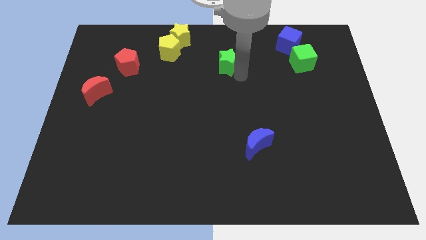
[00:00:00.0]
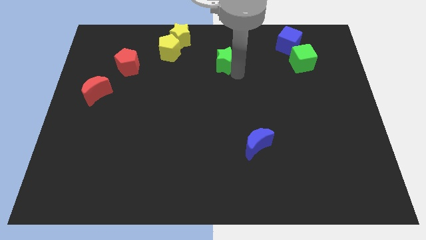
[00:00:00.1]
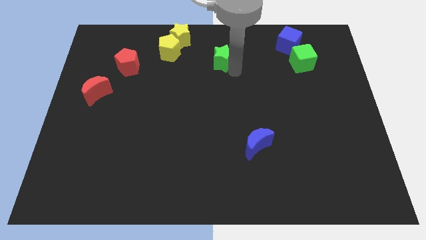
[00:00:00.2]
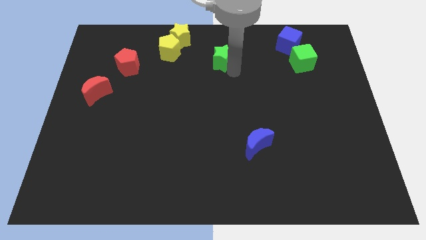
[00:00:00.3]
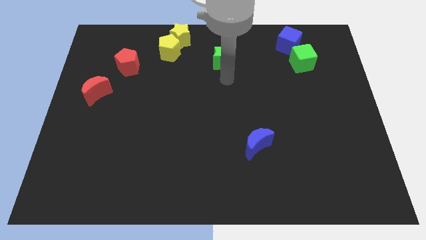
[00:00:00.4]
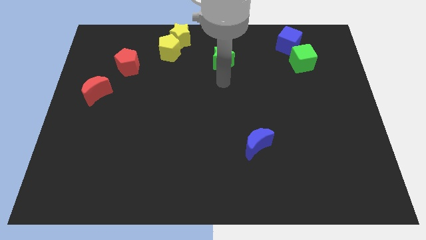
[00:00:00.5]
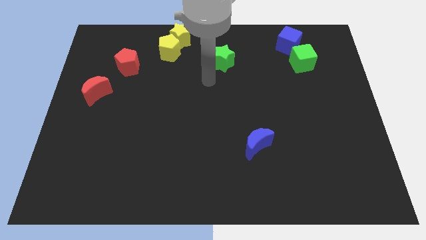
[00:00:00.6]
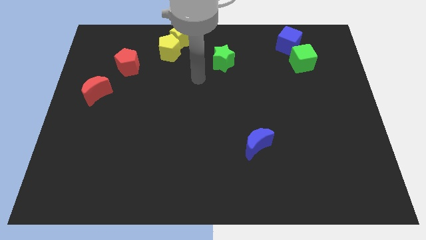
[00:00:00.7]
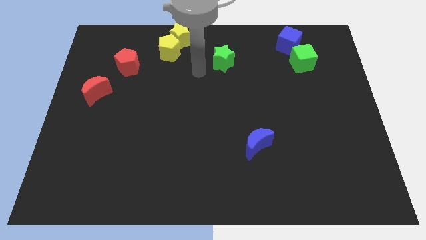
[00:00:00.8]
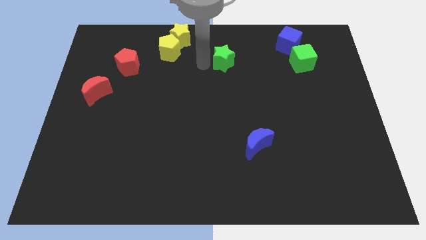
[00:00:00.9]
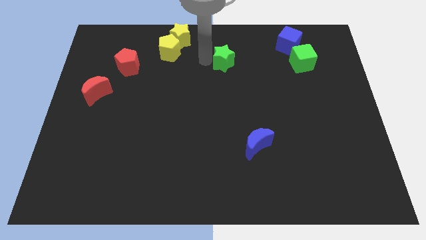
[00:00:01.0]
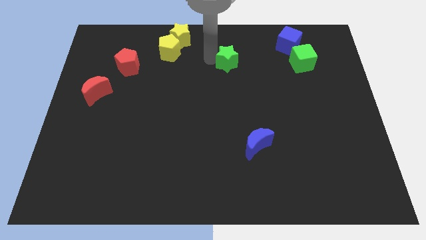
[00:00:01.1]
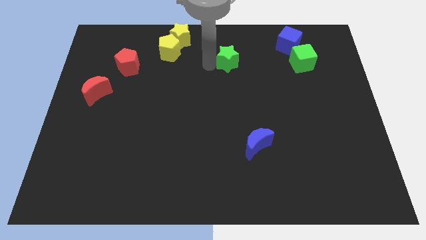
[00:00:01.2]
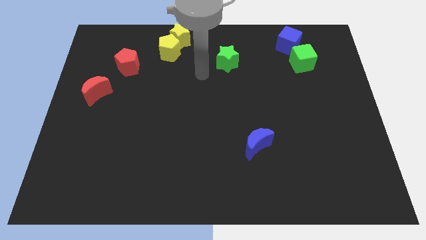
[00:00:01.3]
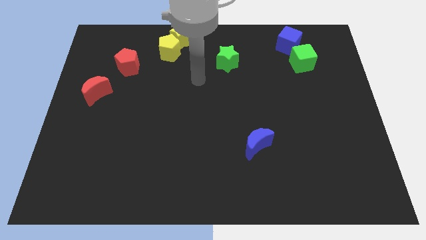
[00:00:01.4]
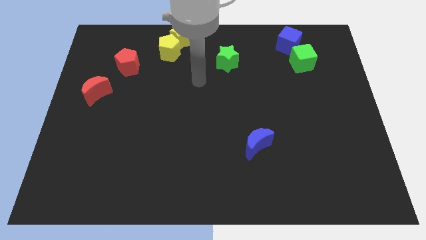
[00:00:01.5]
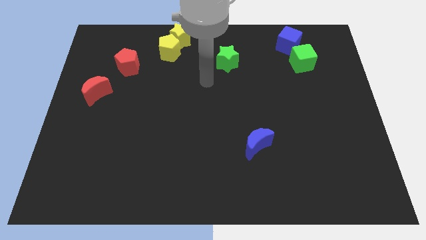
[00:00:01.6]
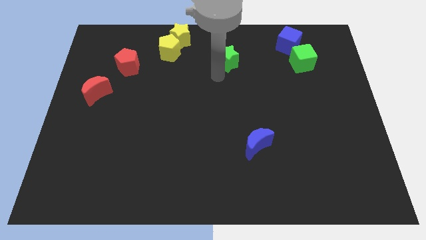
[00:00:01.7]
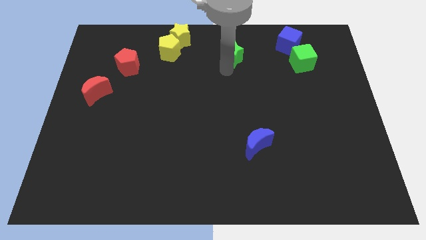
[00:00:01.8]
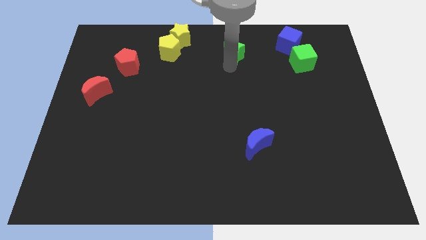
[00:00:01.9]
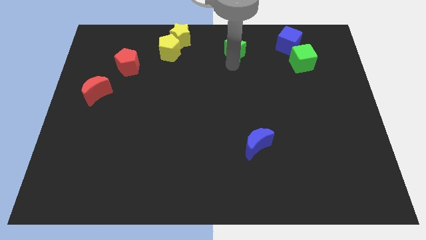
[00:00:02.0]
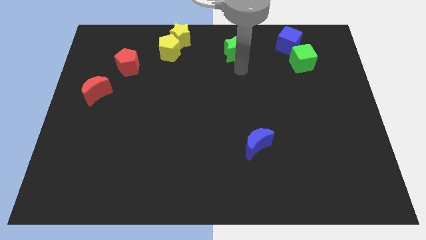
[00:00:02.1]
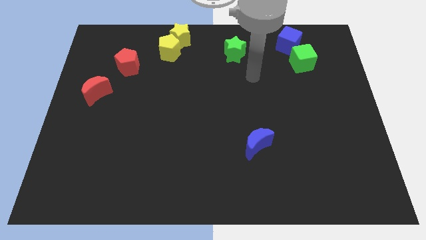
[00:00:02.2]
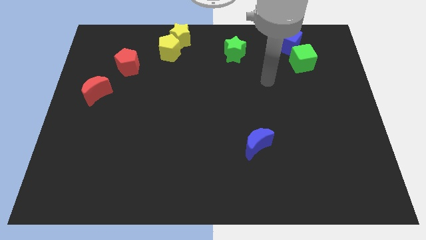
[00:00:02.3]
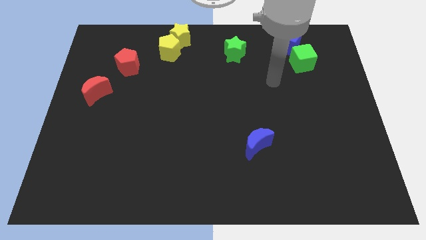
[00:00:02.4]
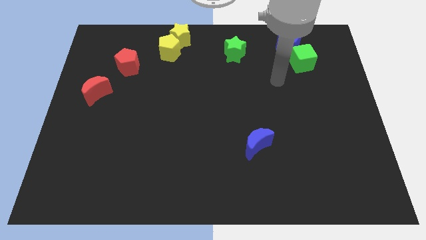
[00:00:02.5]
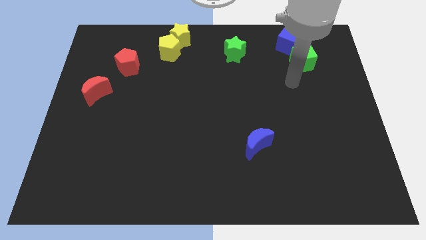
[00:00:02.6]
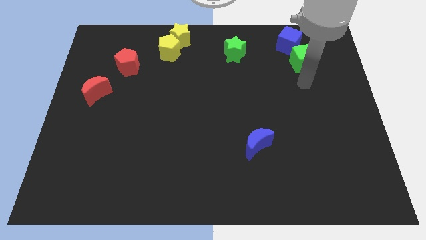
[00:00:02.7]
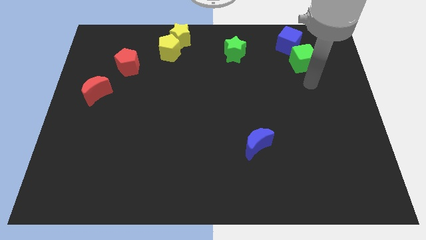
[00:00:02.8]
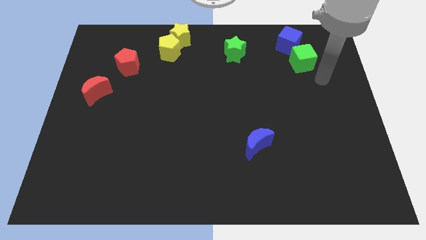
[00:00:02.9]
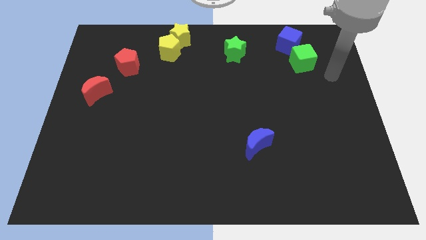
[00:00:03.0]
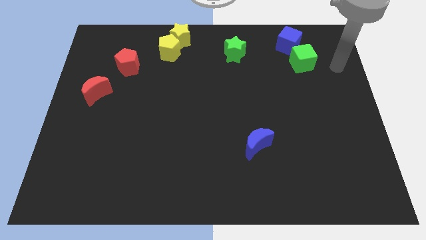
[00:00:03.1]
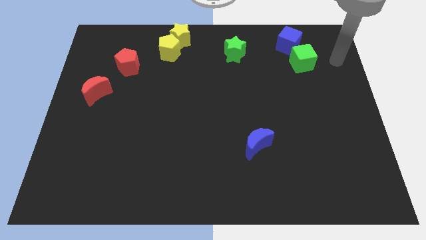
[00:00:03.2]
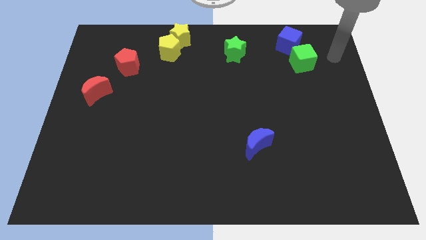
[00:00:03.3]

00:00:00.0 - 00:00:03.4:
adjust the green star to the right side of the yellow pentagon

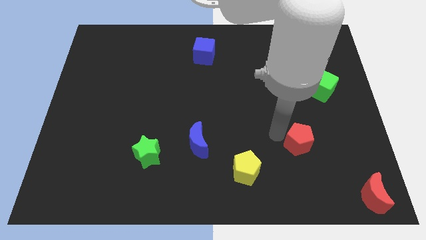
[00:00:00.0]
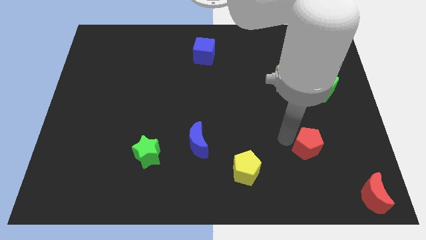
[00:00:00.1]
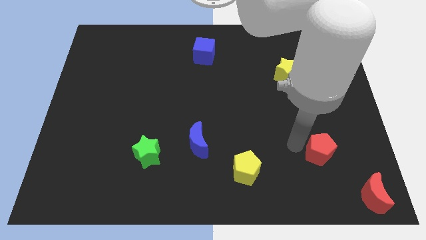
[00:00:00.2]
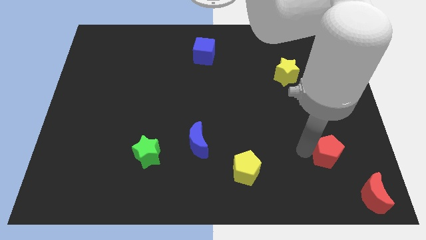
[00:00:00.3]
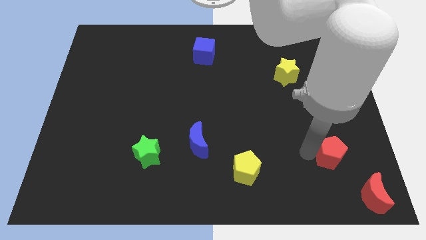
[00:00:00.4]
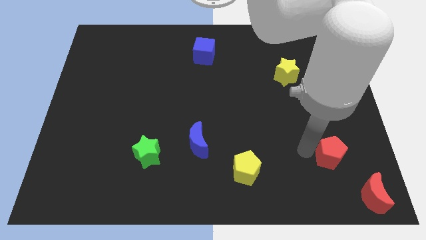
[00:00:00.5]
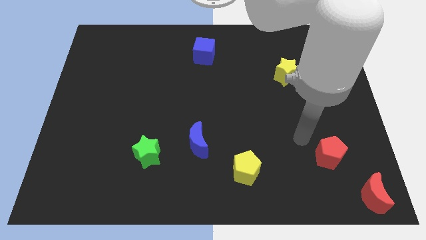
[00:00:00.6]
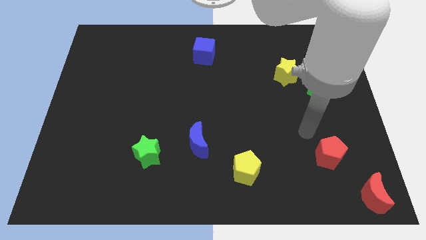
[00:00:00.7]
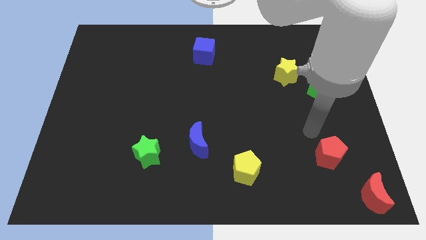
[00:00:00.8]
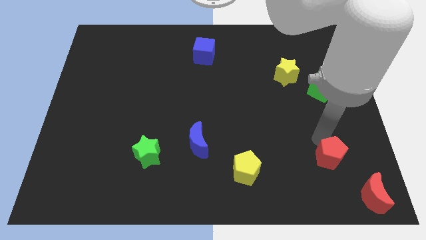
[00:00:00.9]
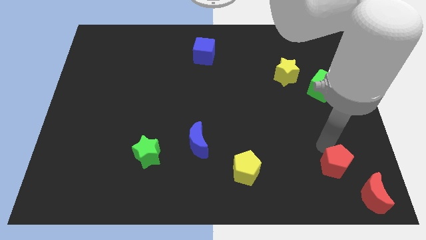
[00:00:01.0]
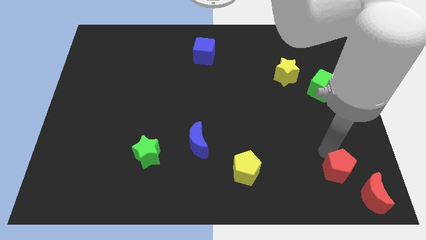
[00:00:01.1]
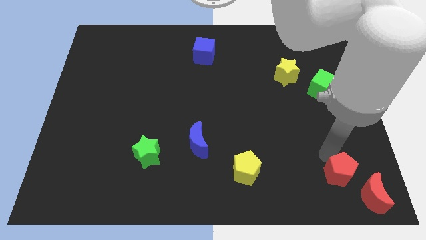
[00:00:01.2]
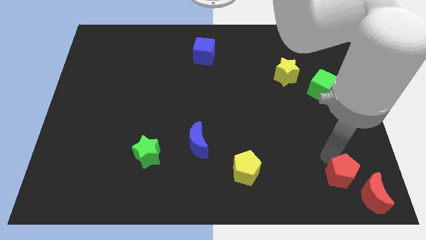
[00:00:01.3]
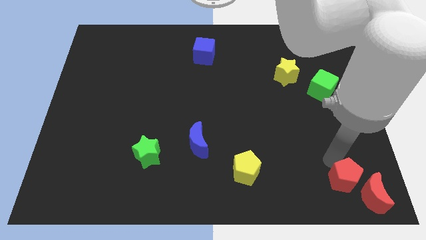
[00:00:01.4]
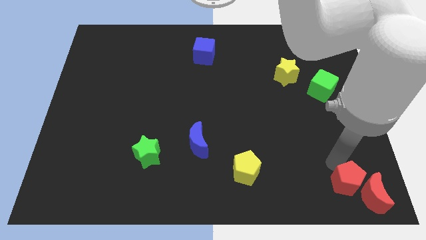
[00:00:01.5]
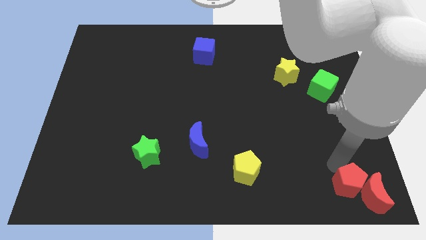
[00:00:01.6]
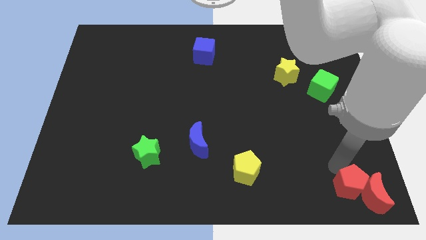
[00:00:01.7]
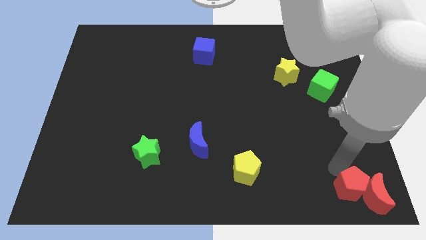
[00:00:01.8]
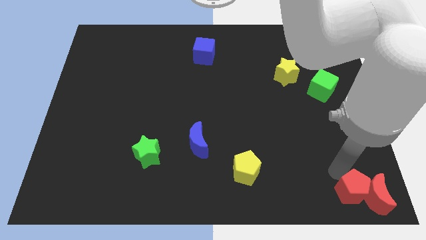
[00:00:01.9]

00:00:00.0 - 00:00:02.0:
push the red pentagon into the red crescent

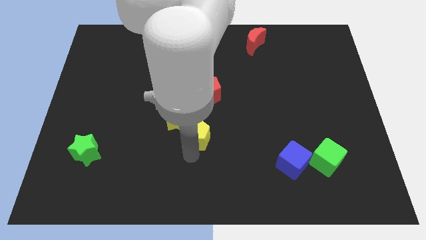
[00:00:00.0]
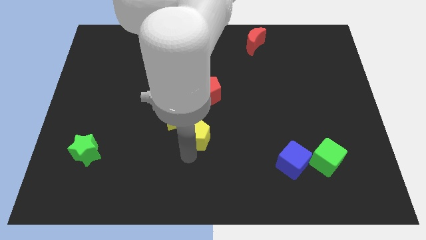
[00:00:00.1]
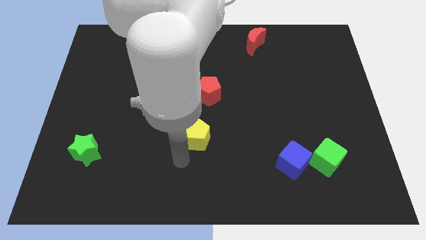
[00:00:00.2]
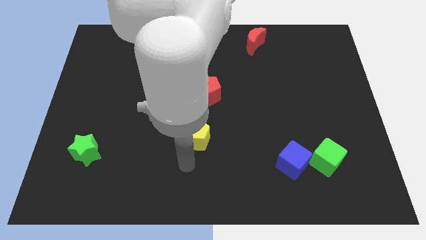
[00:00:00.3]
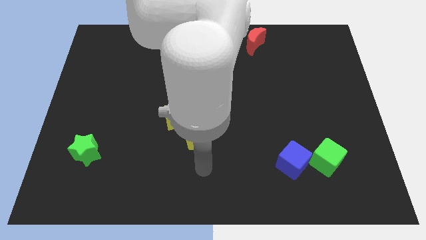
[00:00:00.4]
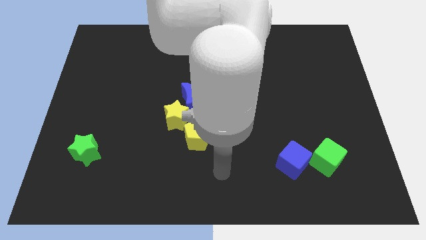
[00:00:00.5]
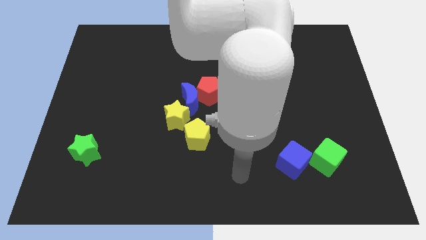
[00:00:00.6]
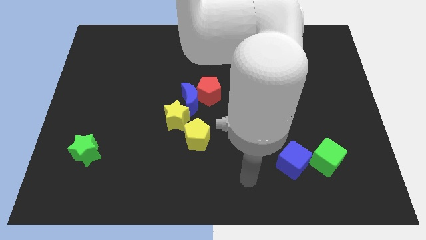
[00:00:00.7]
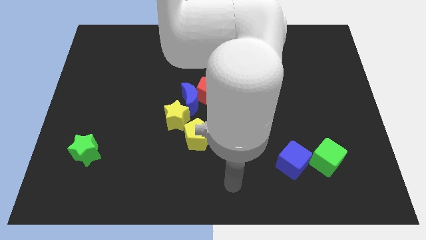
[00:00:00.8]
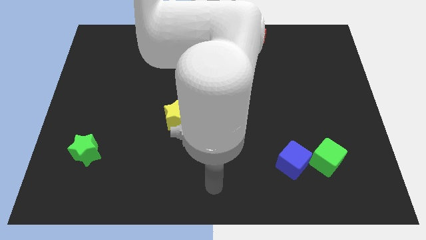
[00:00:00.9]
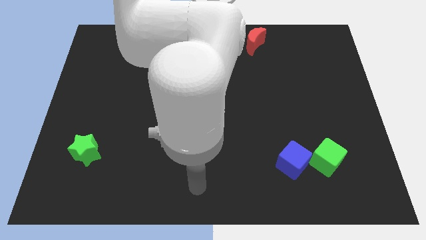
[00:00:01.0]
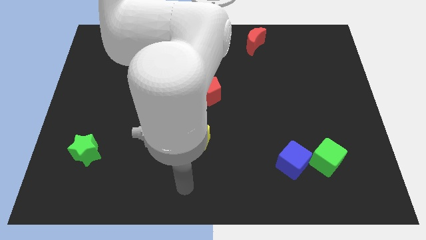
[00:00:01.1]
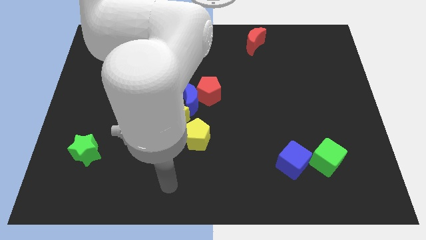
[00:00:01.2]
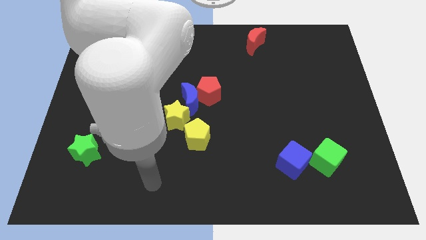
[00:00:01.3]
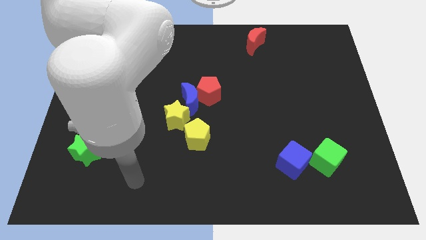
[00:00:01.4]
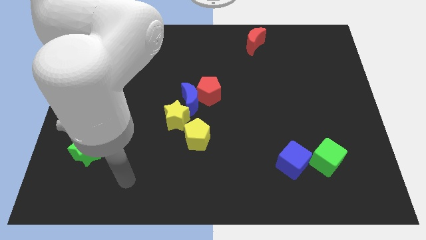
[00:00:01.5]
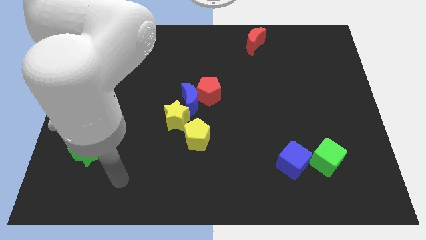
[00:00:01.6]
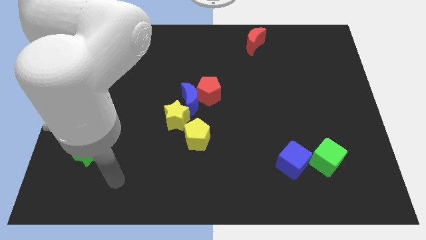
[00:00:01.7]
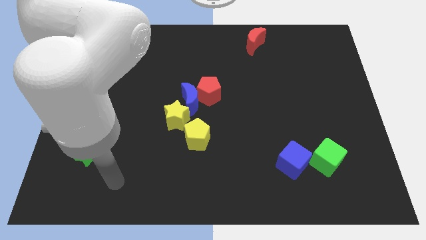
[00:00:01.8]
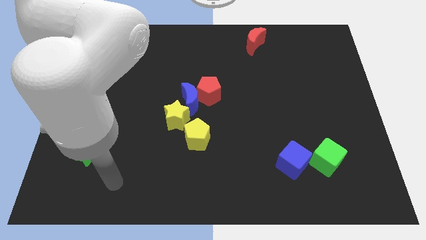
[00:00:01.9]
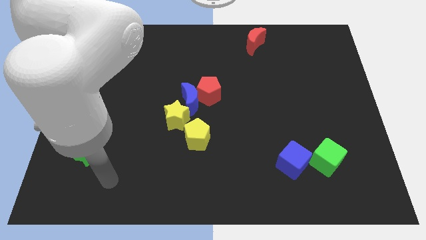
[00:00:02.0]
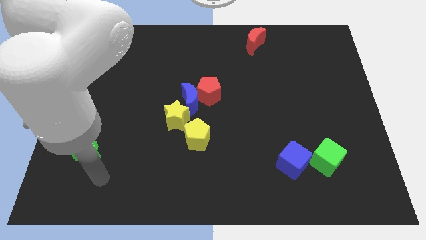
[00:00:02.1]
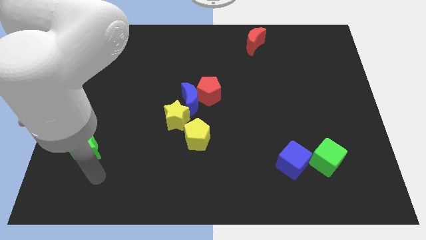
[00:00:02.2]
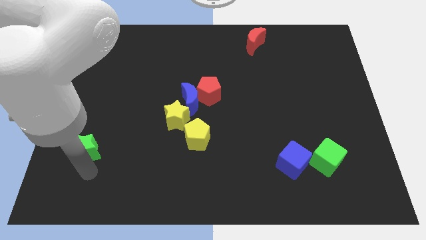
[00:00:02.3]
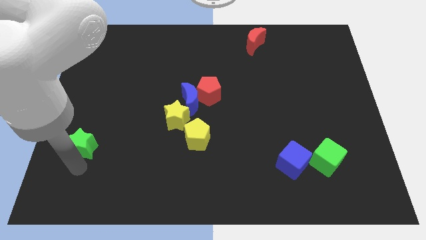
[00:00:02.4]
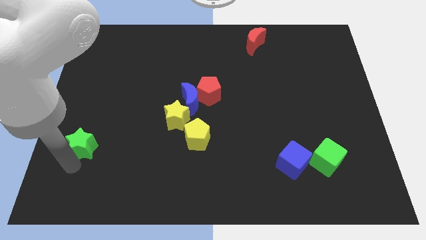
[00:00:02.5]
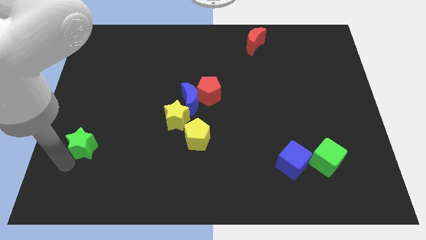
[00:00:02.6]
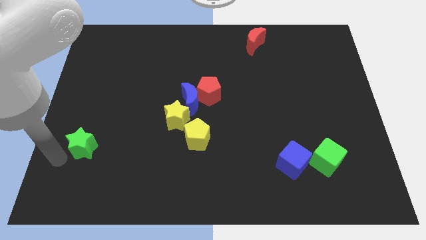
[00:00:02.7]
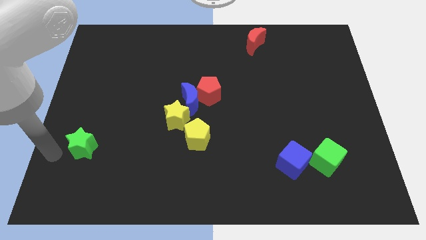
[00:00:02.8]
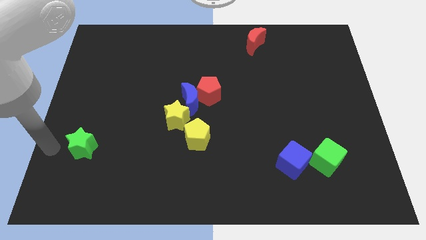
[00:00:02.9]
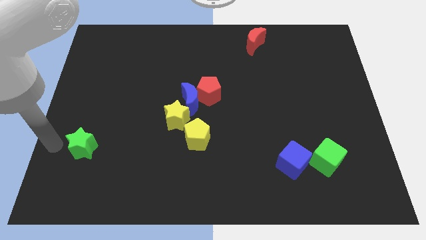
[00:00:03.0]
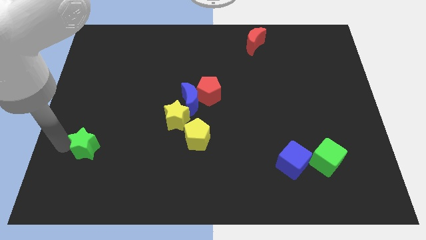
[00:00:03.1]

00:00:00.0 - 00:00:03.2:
move your arm to the left of the green star

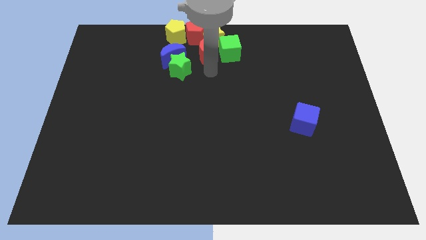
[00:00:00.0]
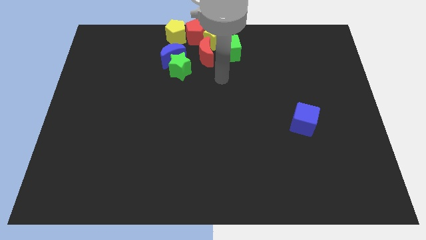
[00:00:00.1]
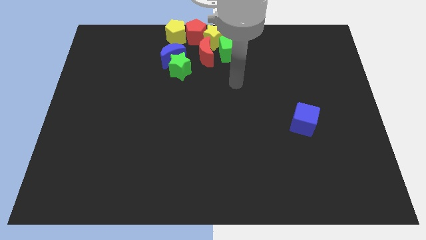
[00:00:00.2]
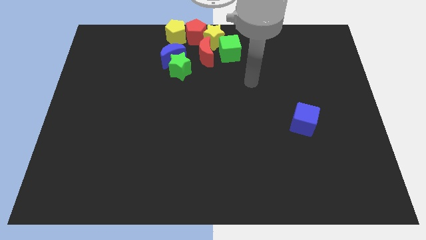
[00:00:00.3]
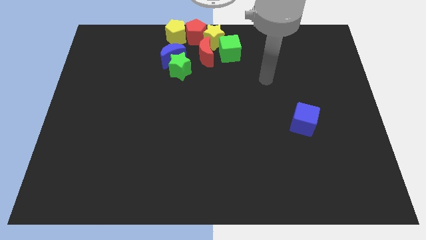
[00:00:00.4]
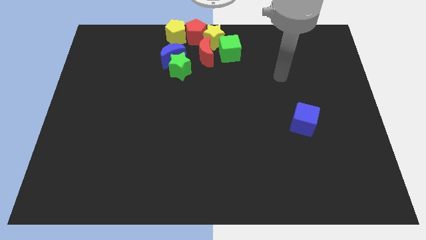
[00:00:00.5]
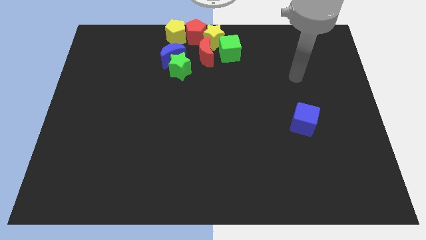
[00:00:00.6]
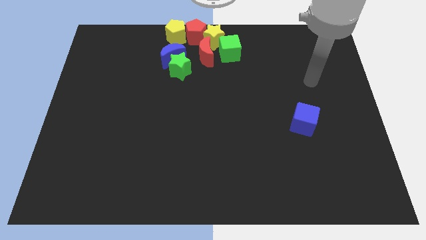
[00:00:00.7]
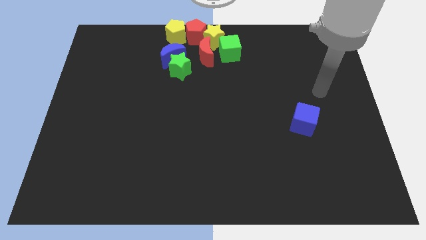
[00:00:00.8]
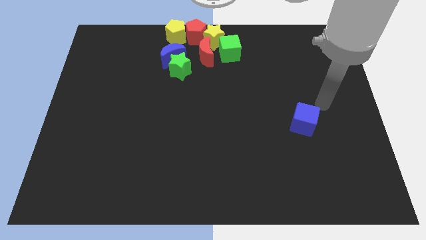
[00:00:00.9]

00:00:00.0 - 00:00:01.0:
move your arm away from the red moon
